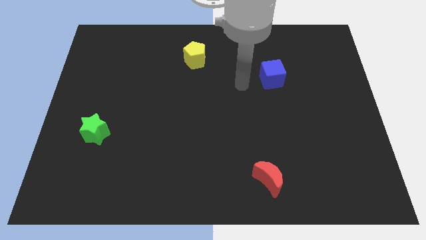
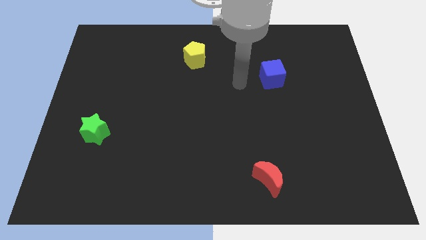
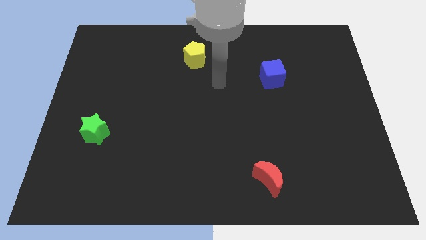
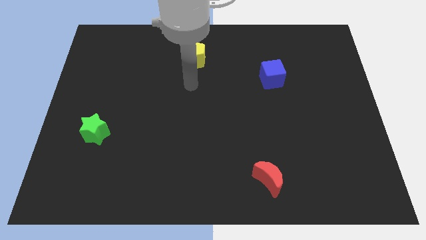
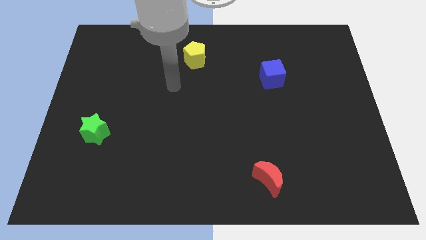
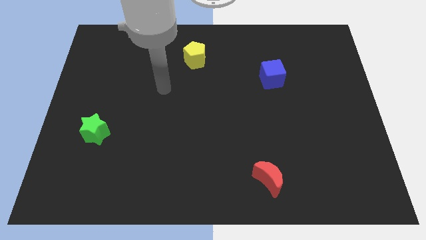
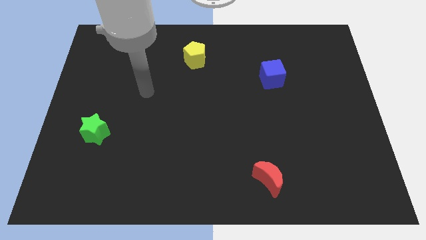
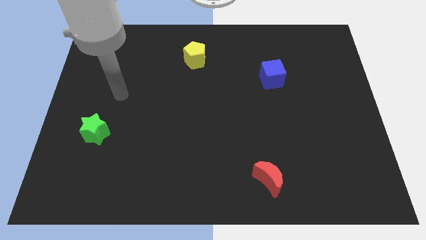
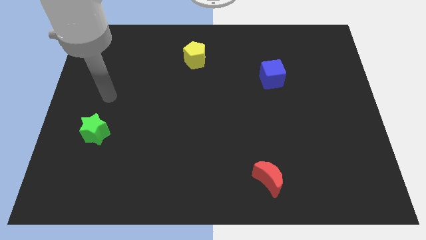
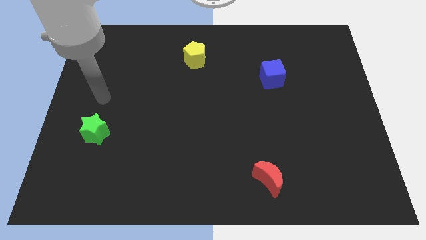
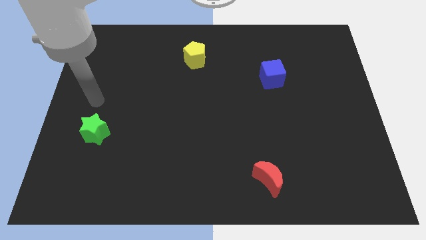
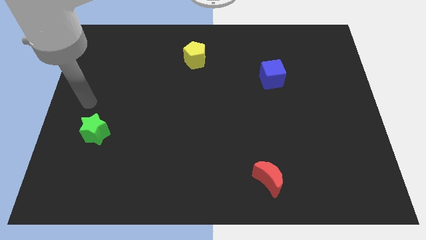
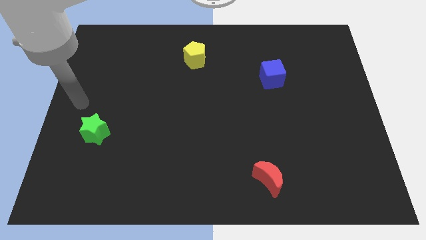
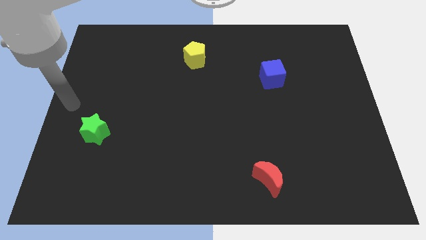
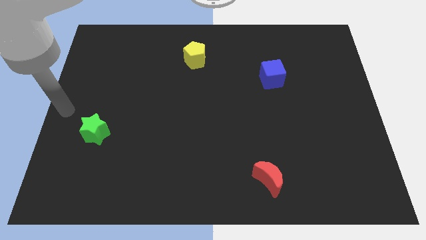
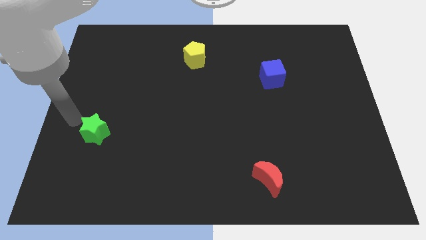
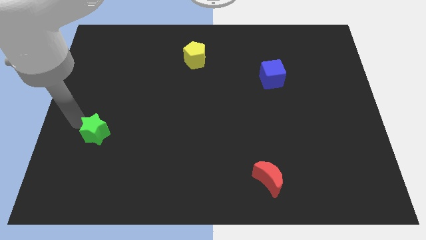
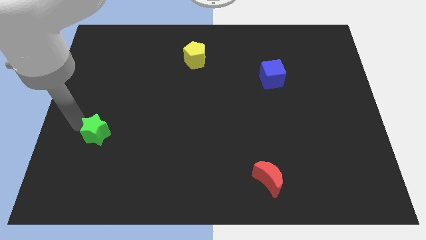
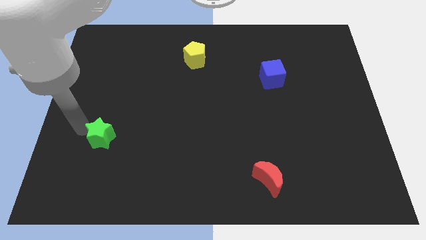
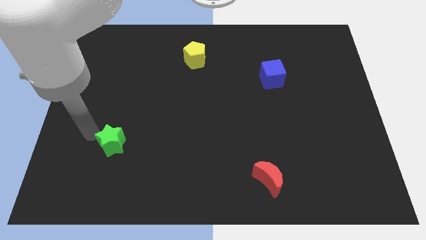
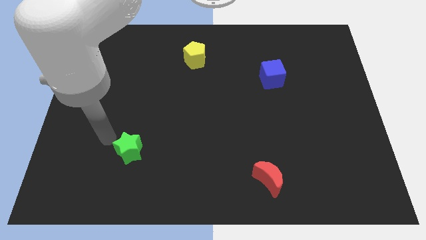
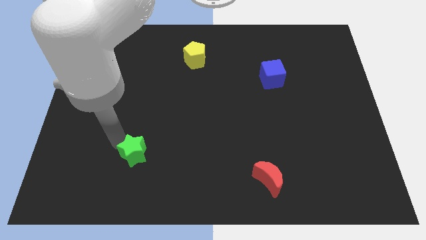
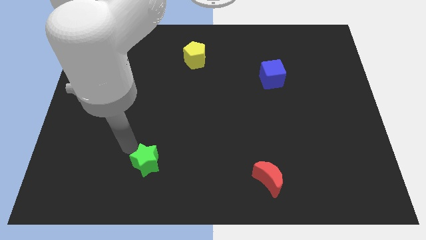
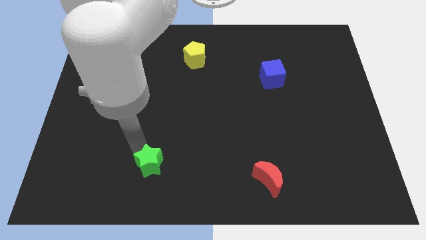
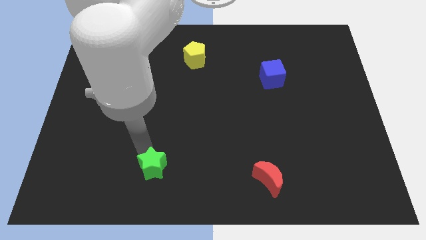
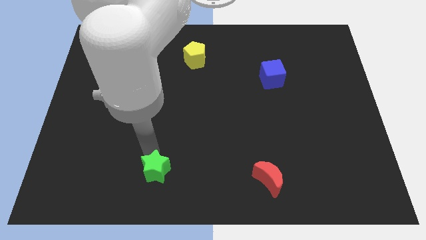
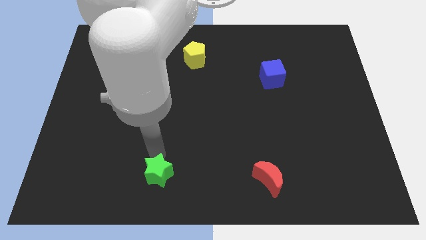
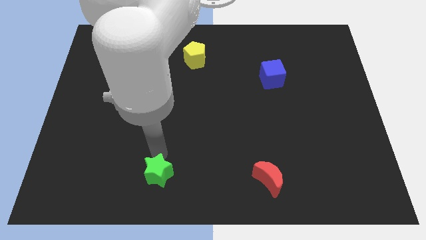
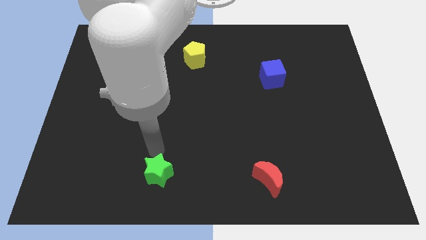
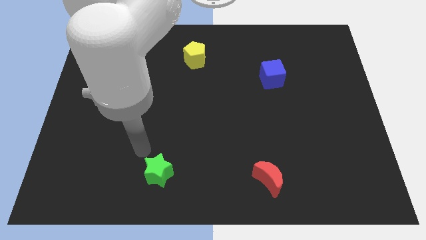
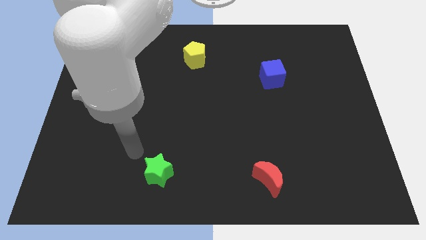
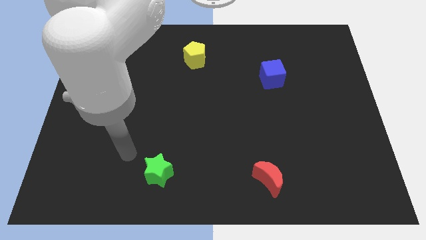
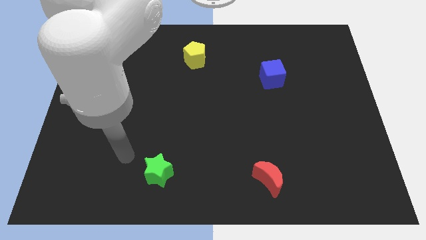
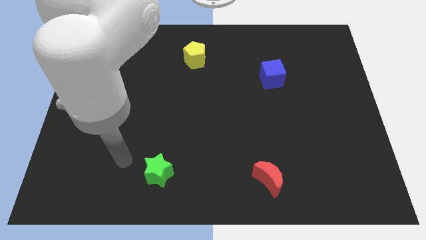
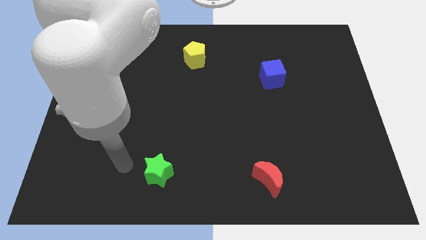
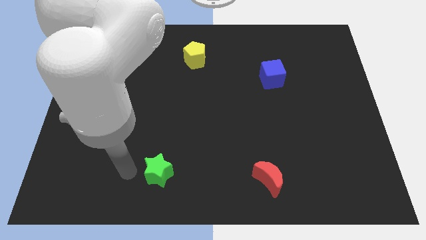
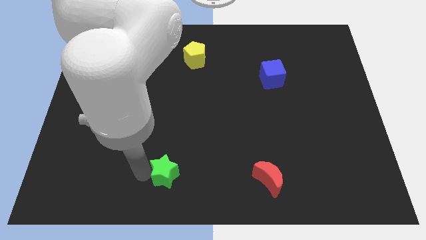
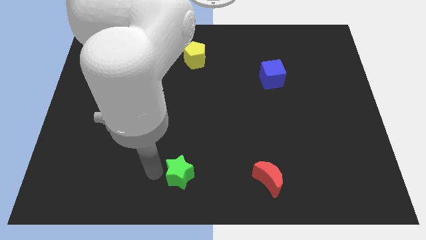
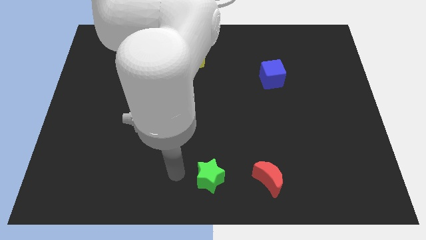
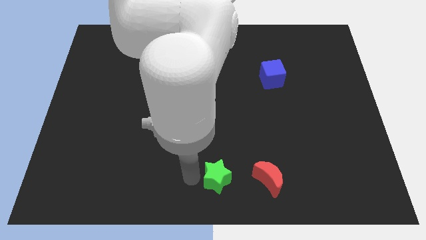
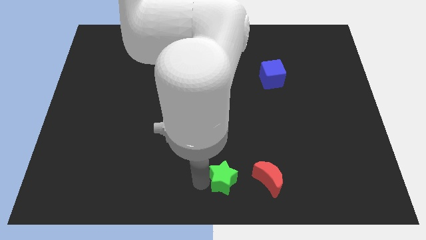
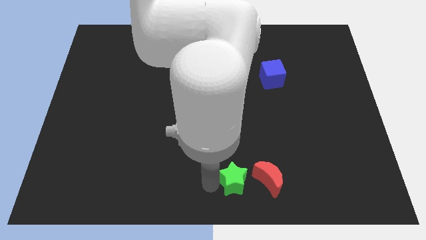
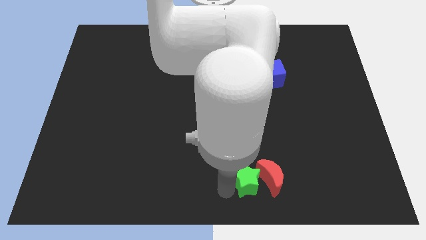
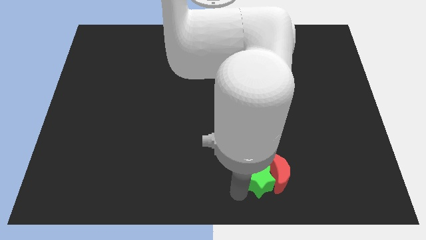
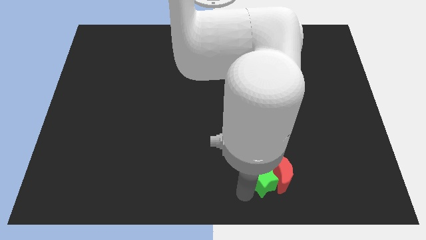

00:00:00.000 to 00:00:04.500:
slide the green star towards the red block

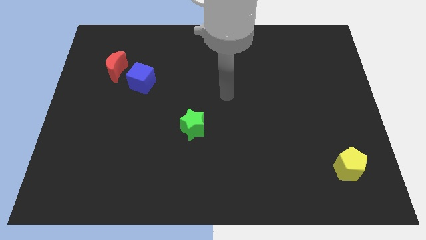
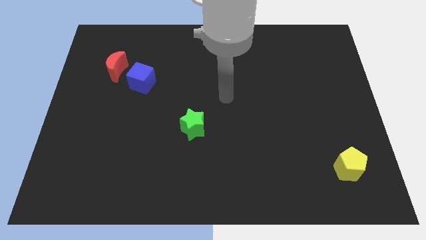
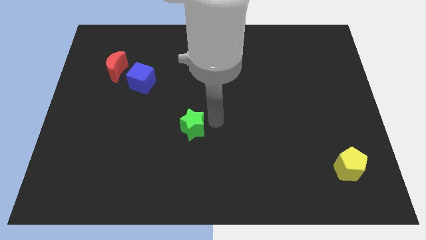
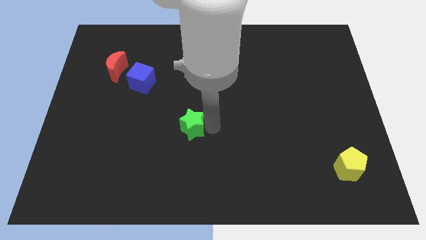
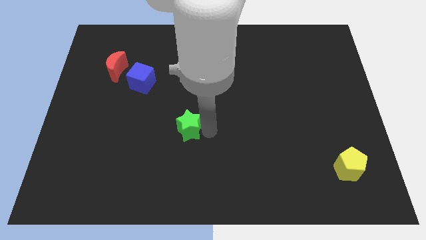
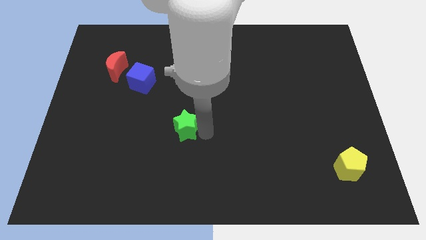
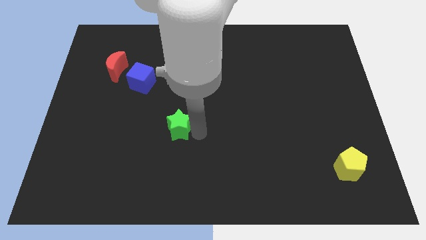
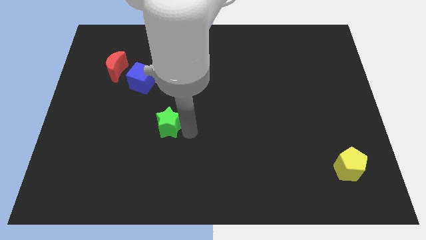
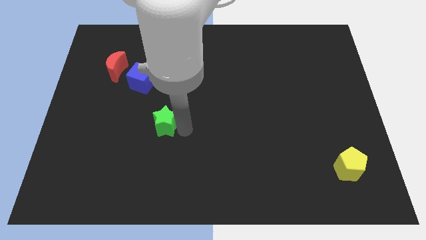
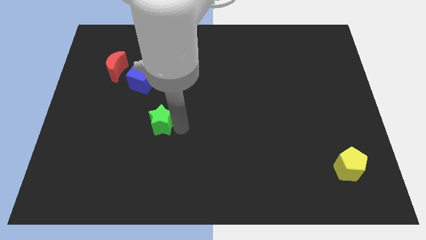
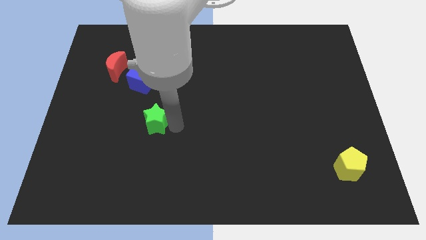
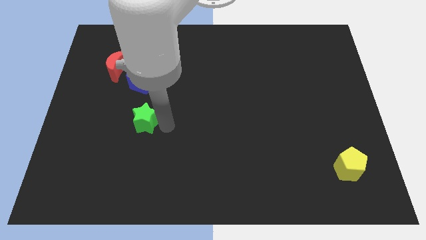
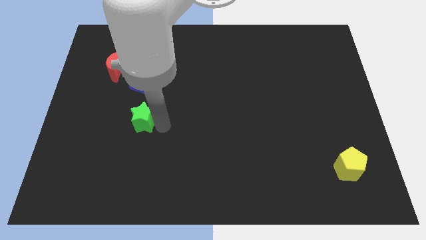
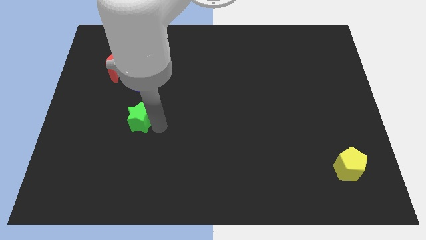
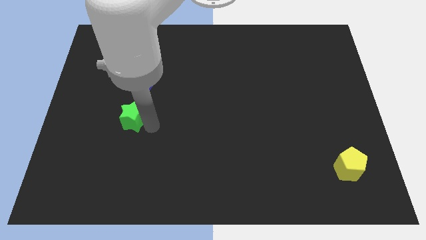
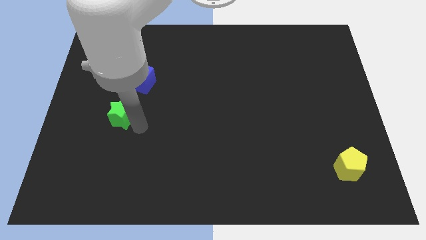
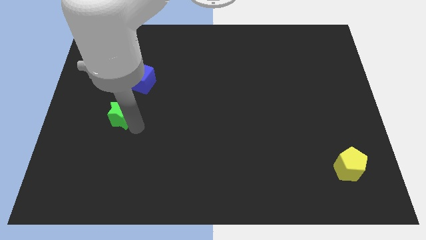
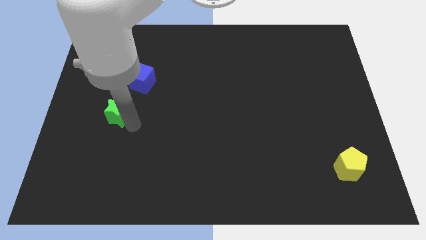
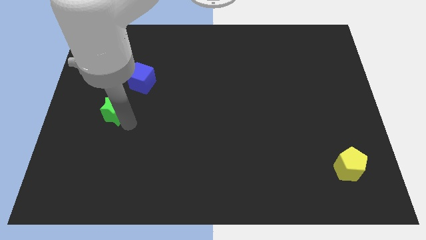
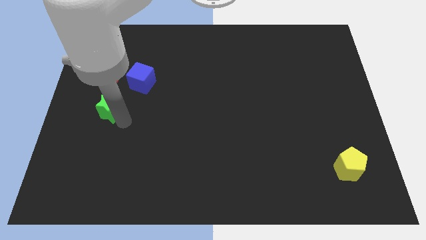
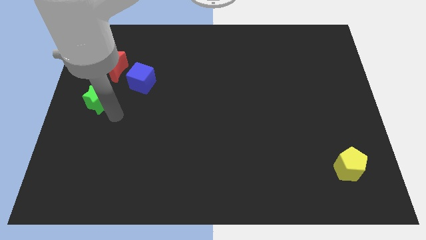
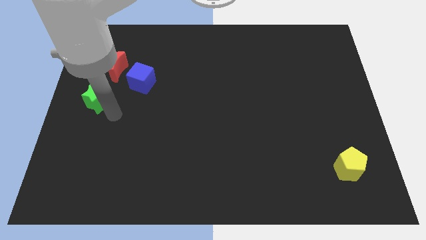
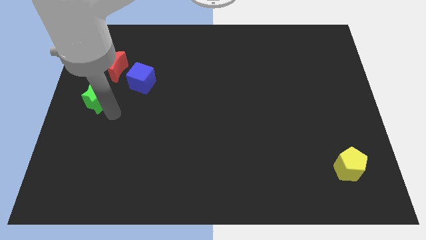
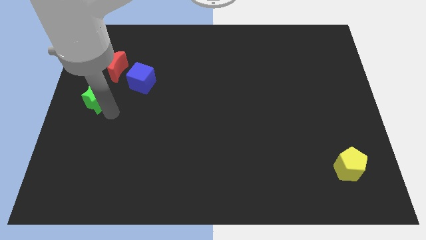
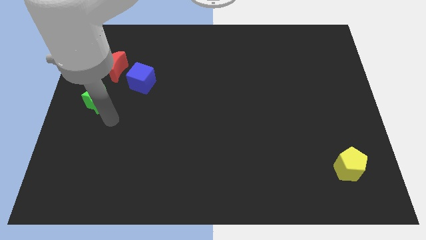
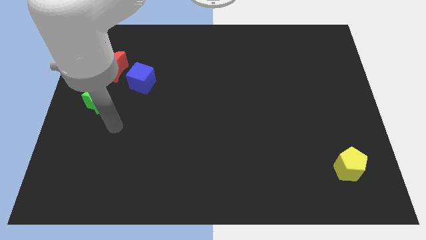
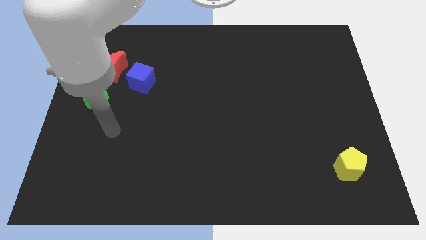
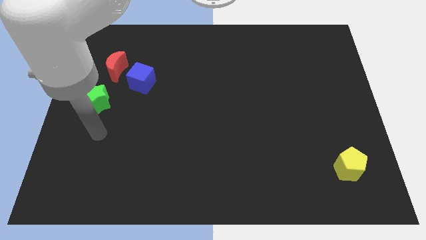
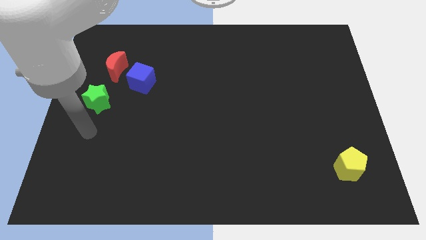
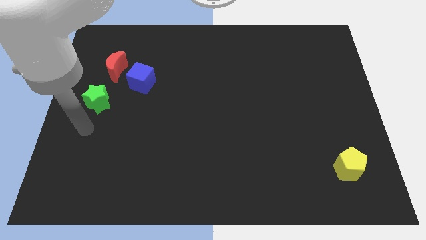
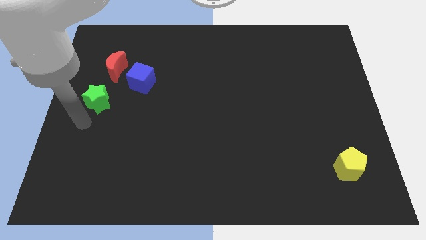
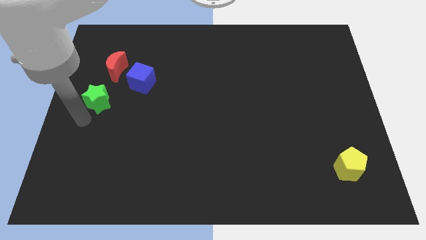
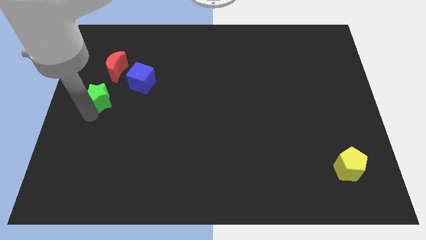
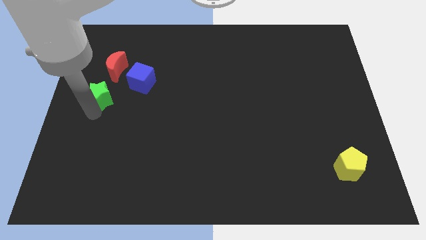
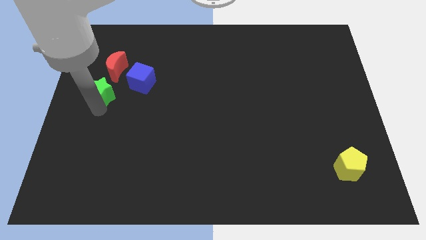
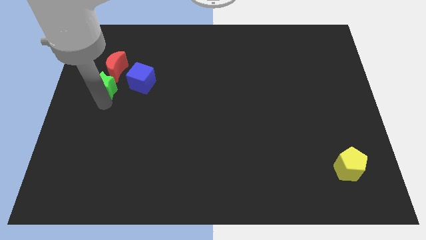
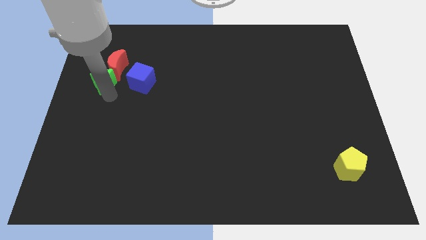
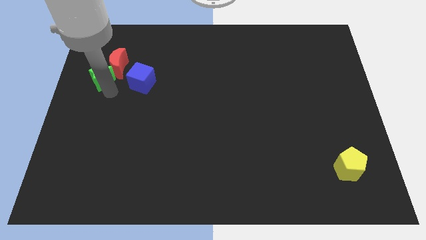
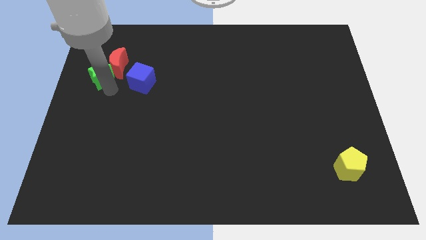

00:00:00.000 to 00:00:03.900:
put the star to the red block

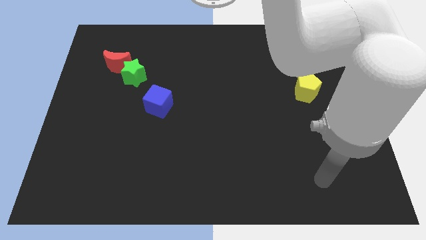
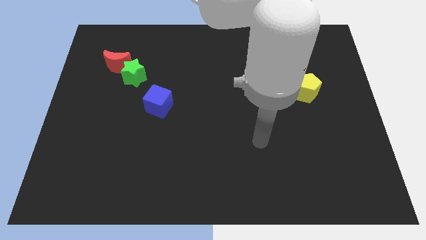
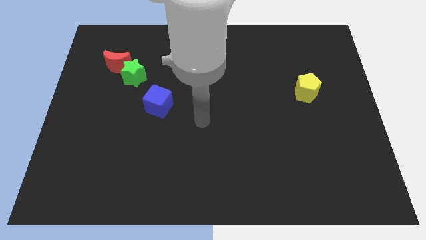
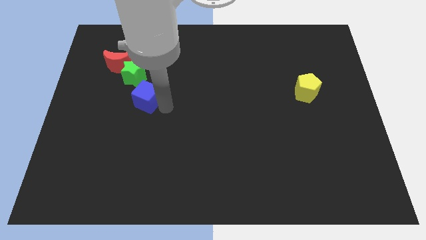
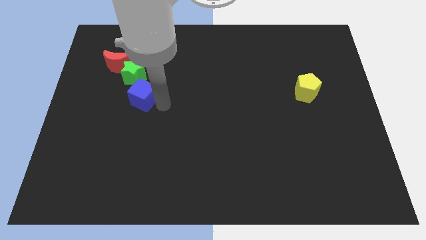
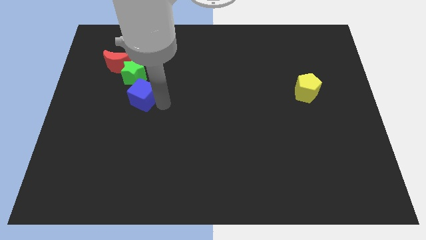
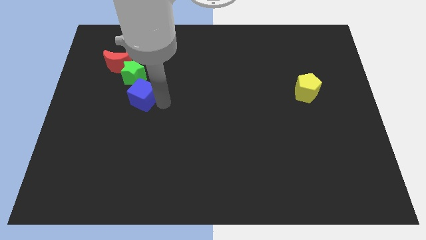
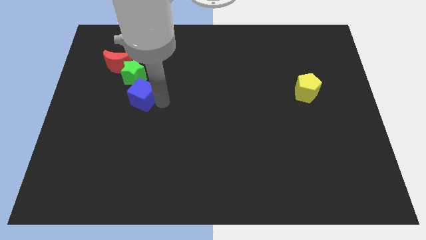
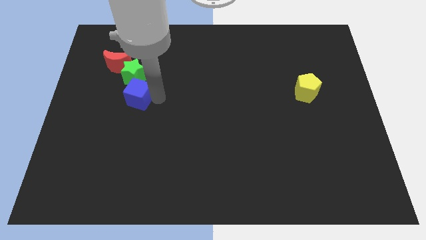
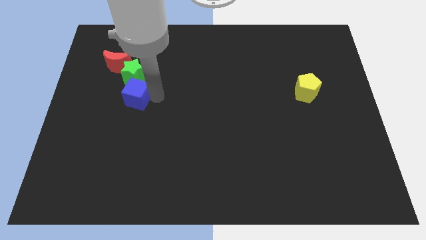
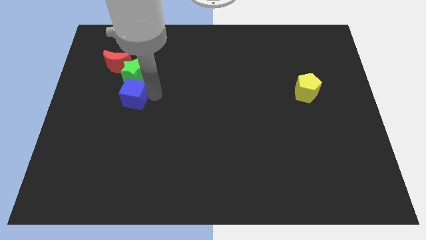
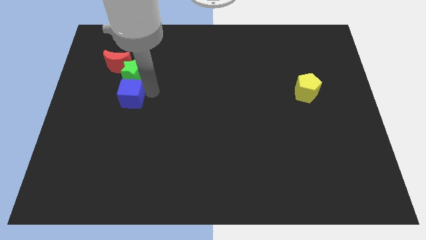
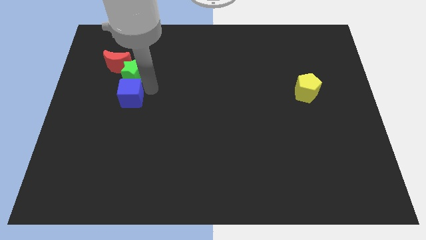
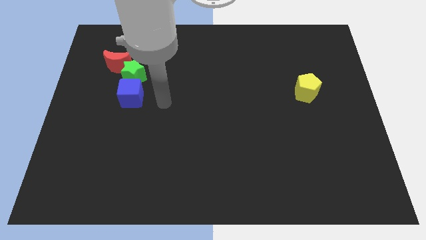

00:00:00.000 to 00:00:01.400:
slide the blue block close to the star
